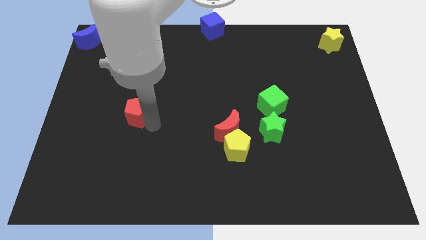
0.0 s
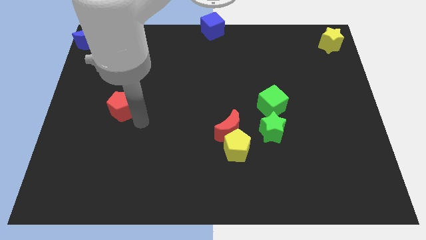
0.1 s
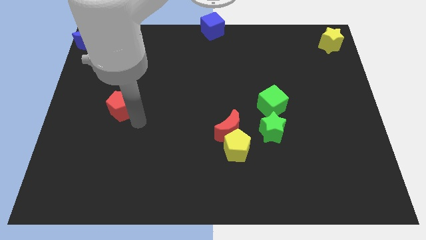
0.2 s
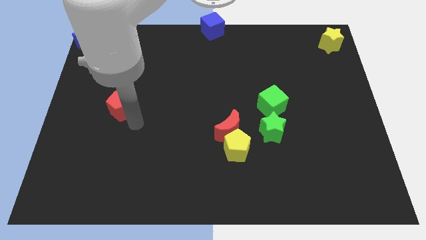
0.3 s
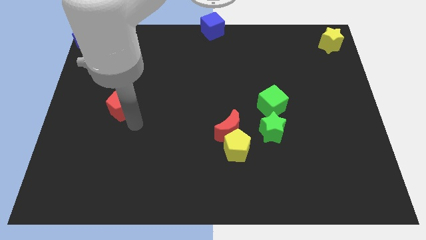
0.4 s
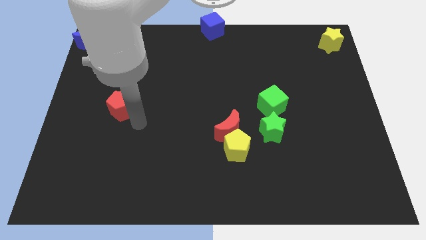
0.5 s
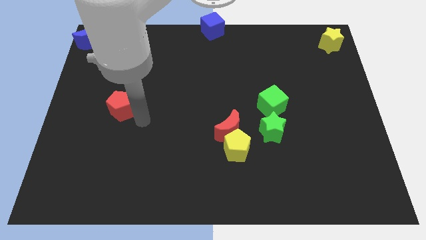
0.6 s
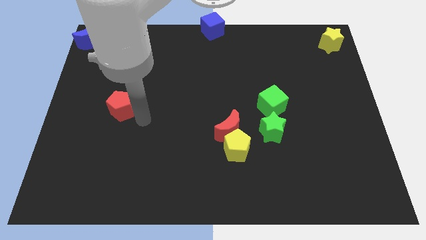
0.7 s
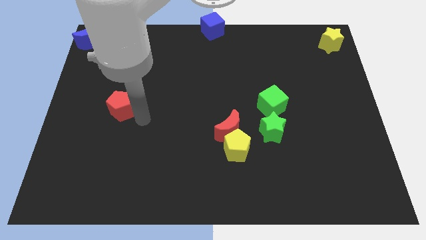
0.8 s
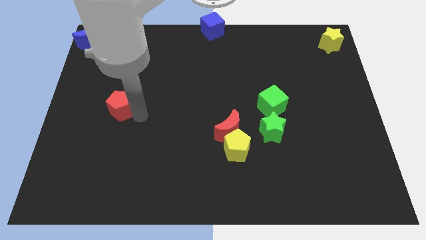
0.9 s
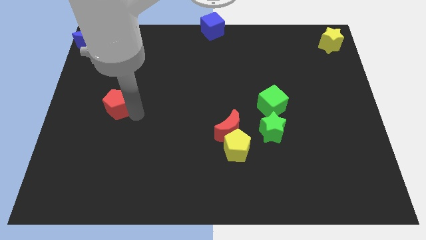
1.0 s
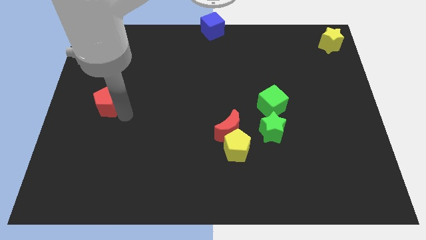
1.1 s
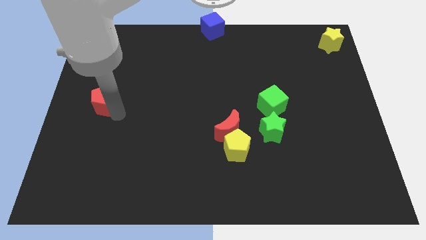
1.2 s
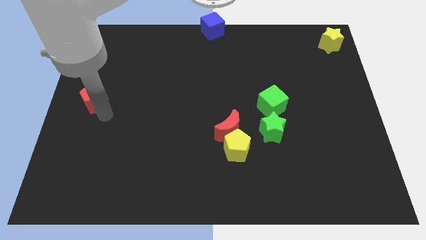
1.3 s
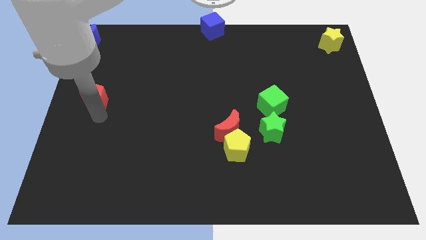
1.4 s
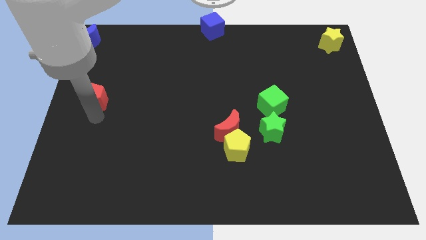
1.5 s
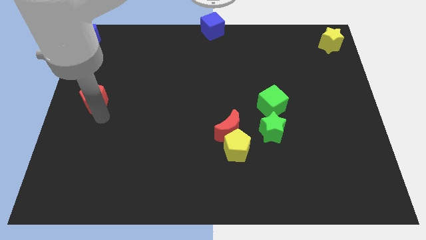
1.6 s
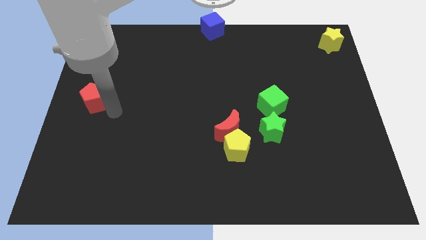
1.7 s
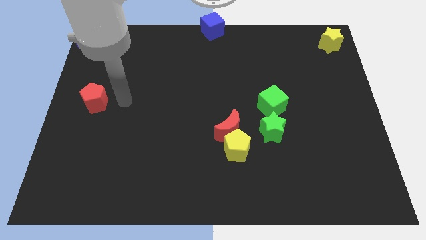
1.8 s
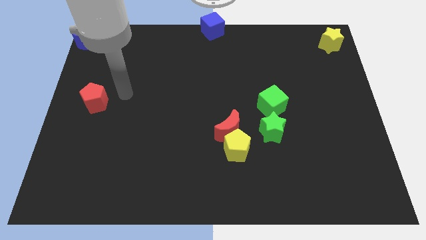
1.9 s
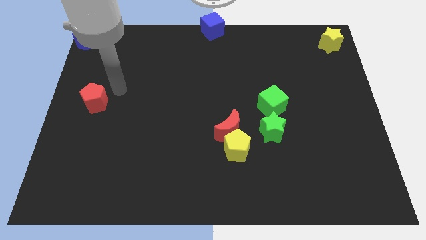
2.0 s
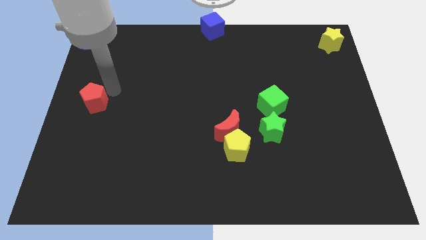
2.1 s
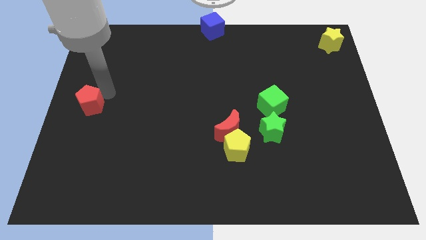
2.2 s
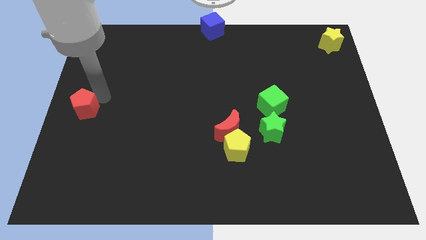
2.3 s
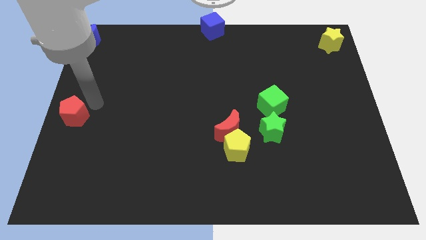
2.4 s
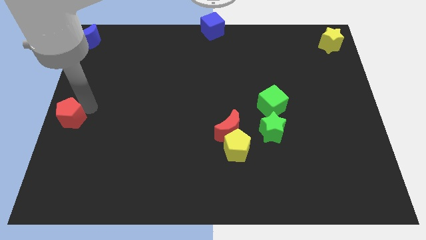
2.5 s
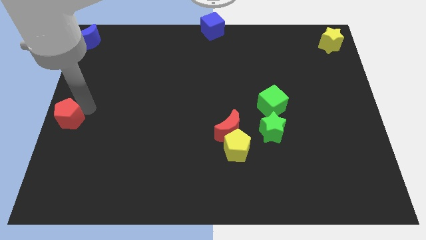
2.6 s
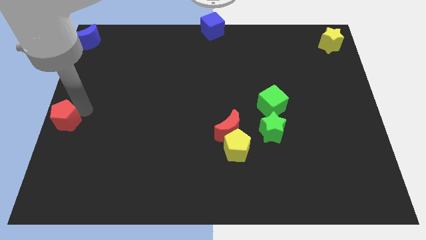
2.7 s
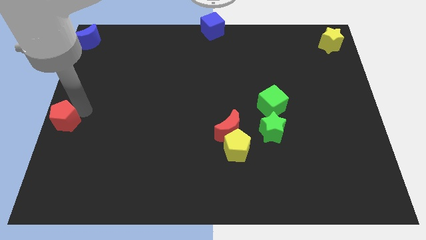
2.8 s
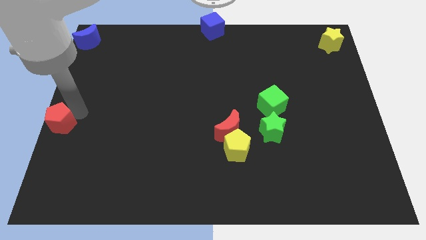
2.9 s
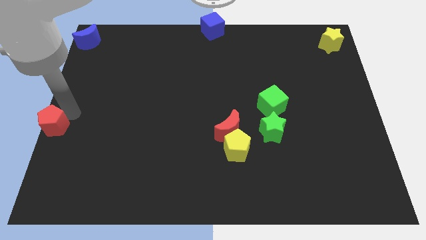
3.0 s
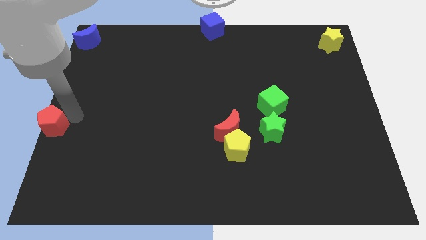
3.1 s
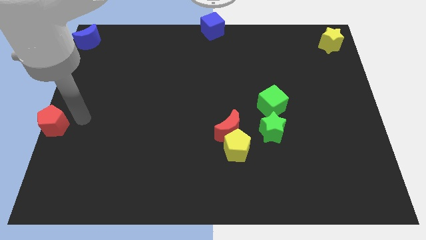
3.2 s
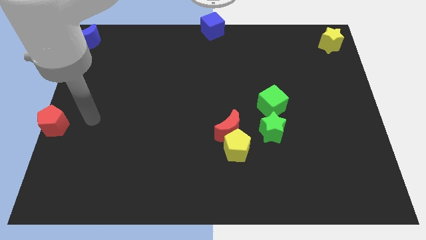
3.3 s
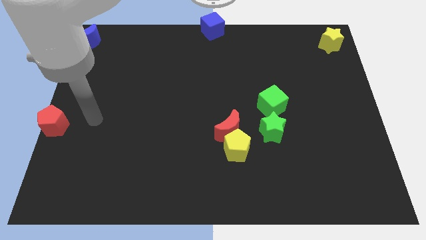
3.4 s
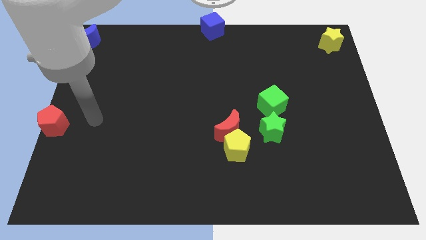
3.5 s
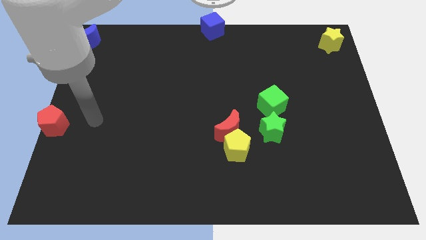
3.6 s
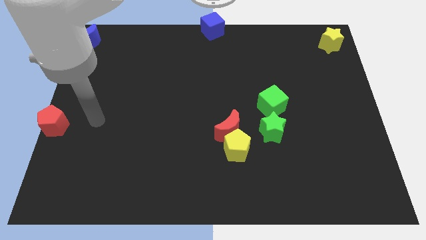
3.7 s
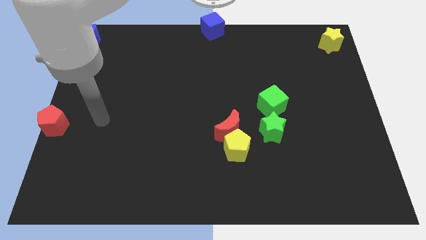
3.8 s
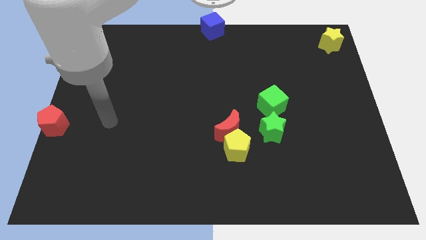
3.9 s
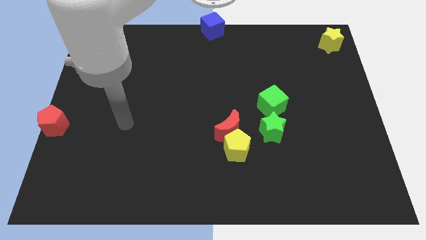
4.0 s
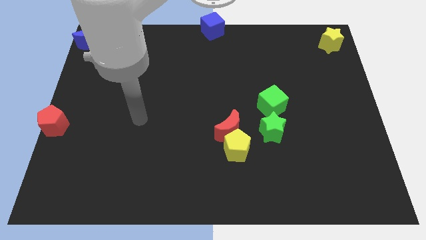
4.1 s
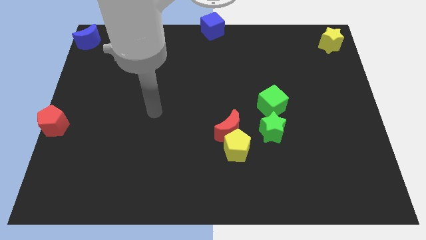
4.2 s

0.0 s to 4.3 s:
line the red pentagon up vertically below the blue crescent

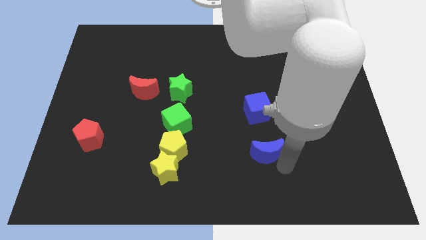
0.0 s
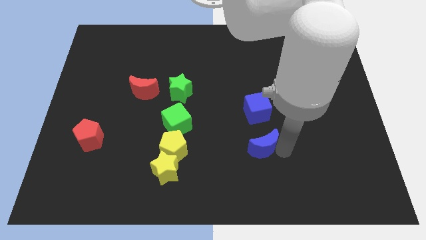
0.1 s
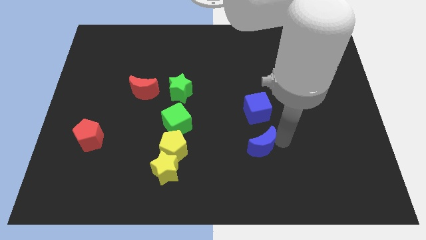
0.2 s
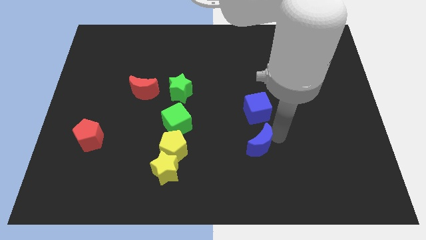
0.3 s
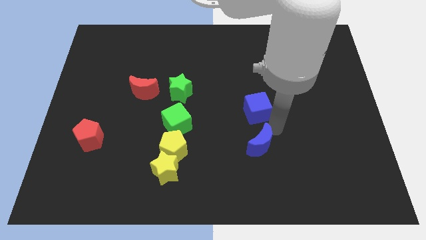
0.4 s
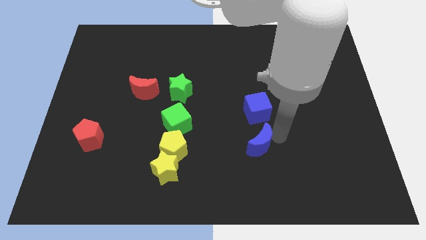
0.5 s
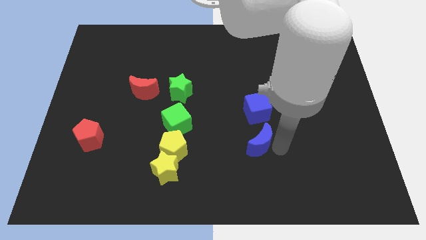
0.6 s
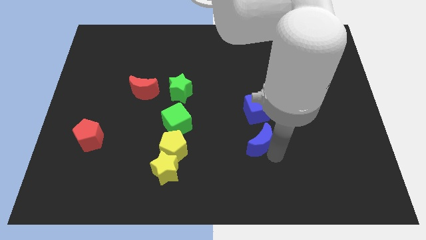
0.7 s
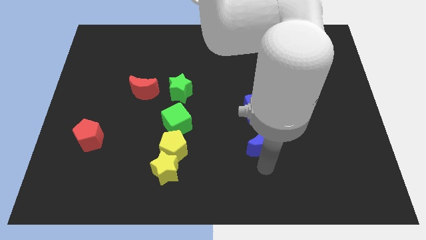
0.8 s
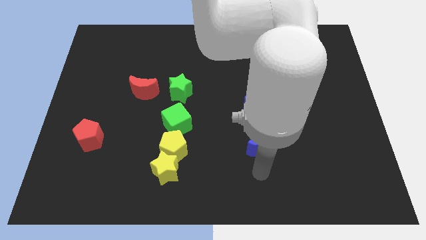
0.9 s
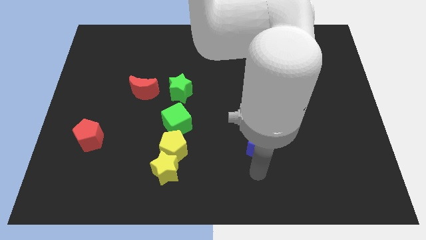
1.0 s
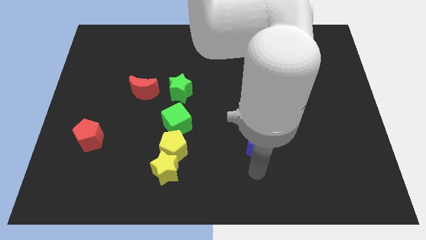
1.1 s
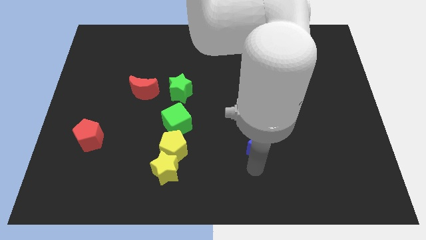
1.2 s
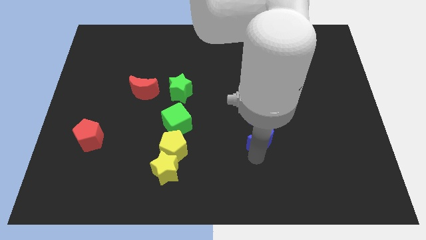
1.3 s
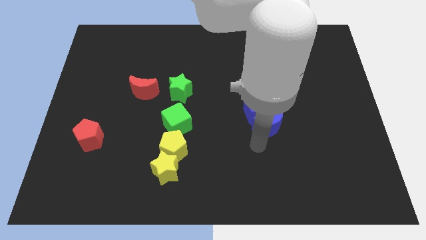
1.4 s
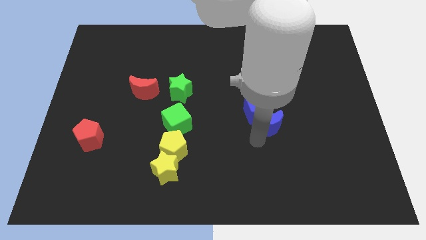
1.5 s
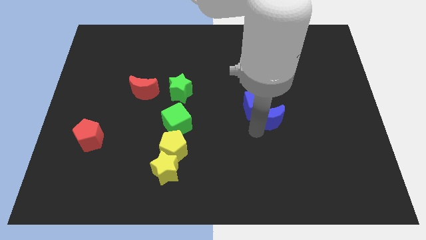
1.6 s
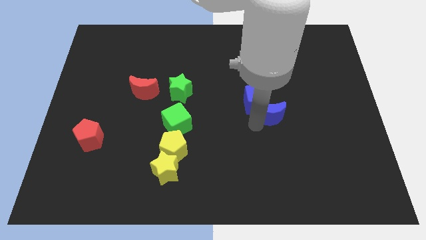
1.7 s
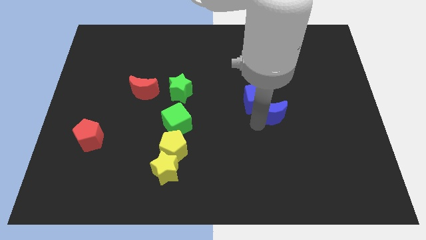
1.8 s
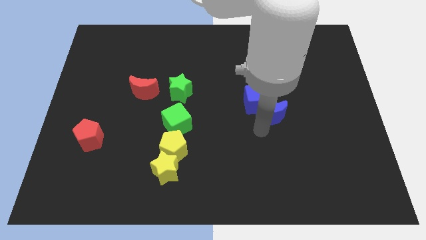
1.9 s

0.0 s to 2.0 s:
slide the blue crescent into the blue cube

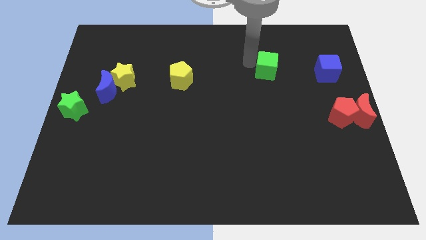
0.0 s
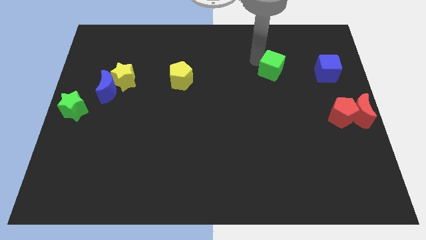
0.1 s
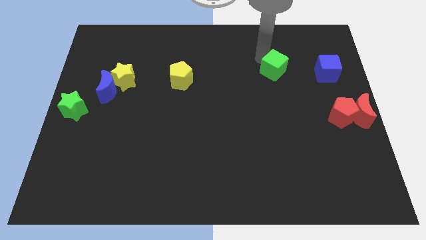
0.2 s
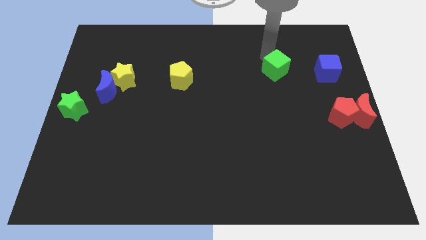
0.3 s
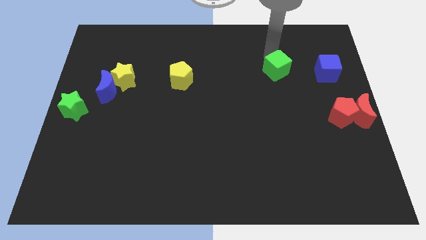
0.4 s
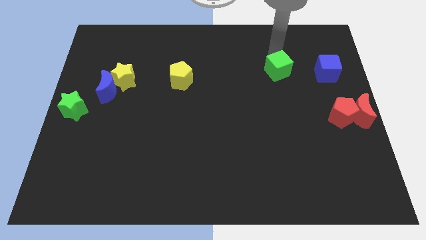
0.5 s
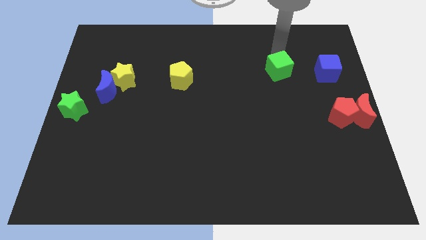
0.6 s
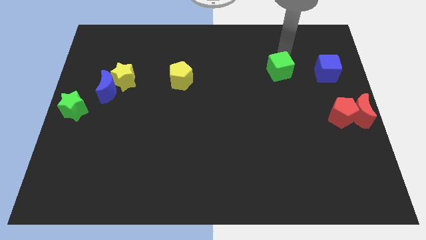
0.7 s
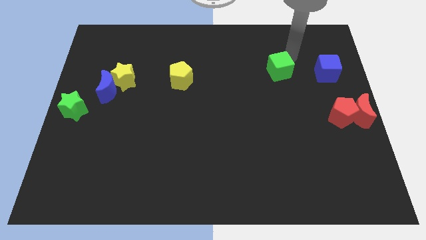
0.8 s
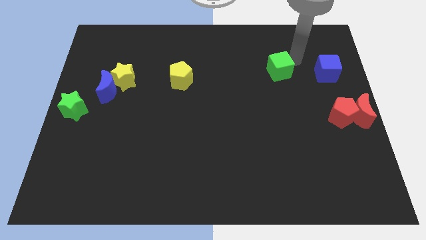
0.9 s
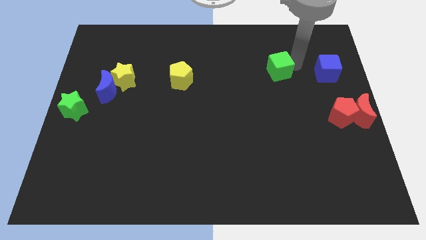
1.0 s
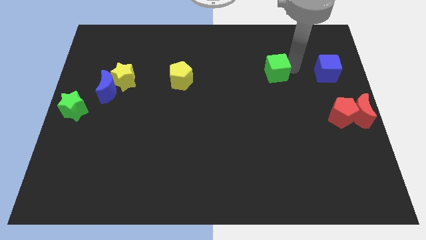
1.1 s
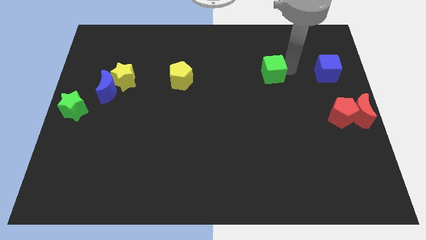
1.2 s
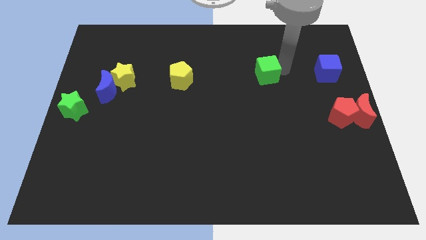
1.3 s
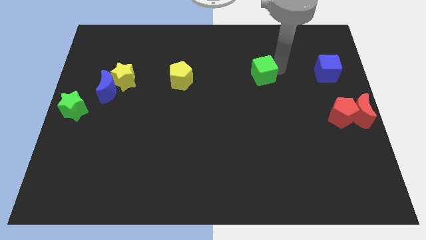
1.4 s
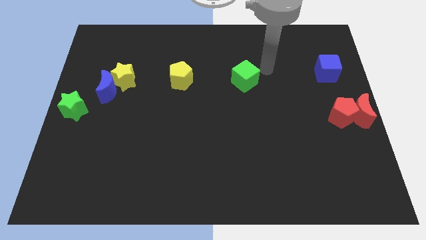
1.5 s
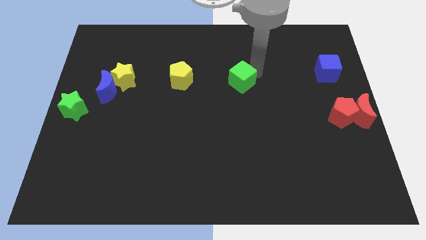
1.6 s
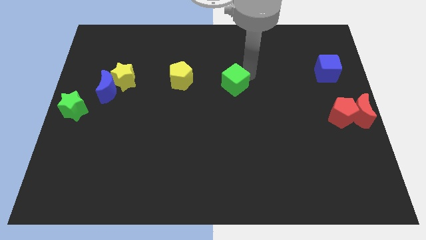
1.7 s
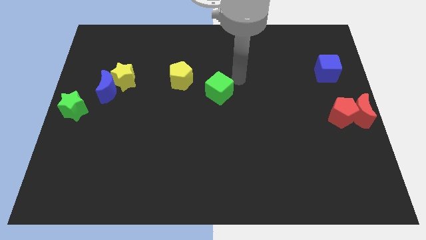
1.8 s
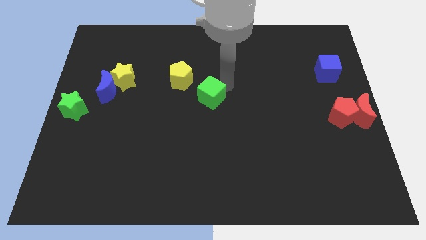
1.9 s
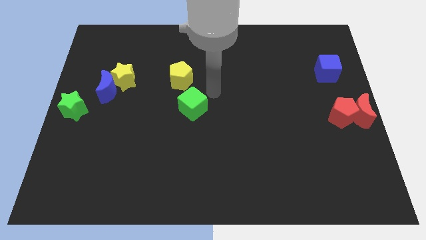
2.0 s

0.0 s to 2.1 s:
move the green cube towards the downwards to the yellow pentagon

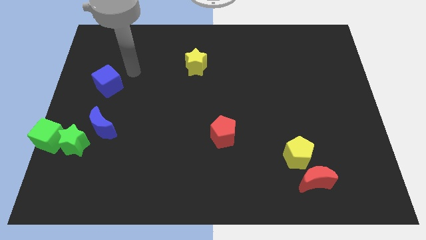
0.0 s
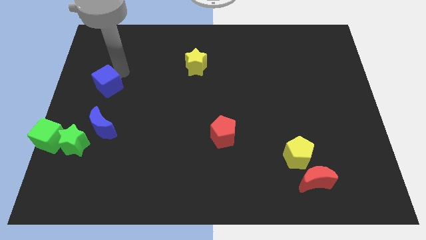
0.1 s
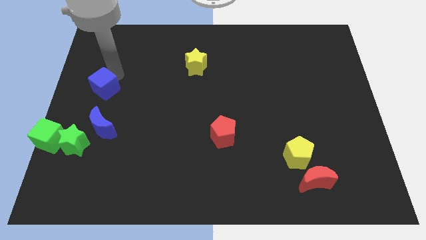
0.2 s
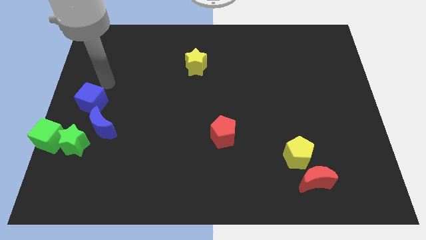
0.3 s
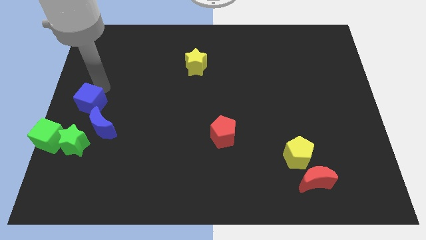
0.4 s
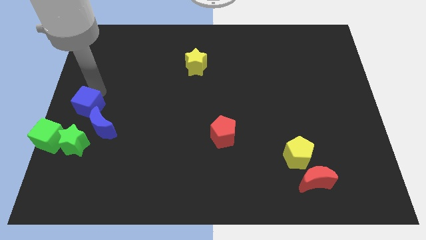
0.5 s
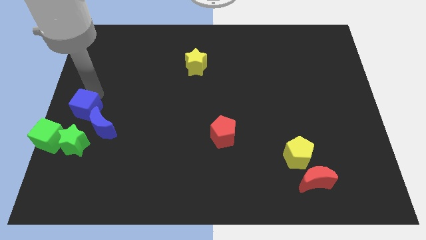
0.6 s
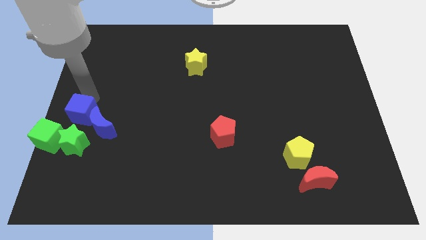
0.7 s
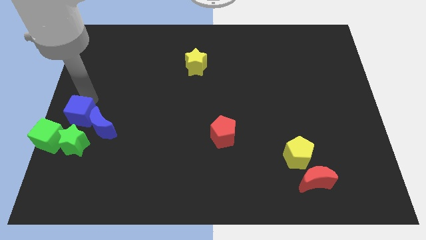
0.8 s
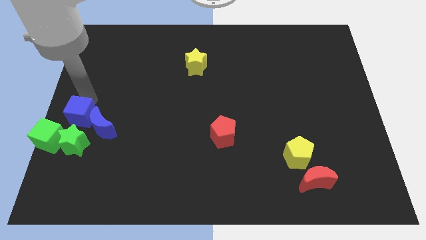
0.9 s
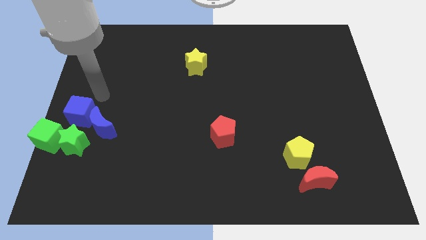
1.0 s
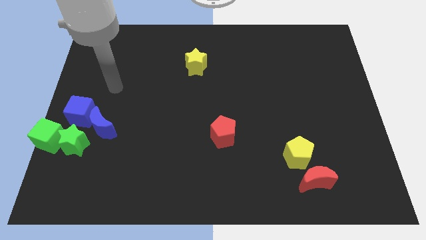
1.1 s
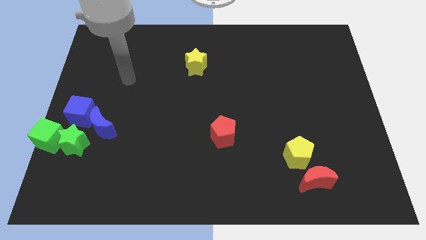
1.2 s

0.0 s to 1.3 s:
move the blue cube to the left of the blue crescent
